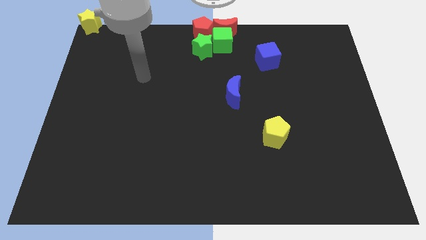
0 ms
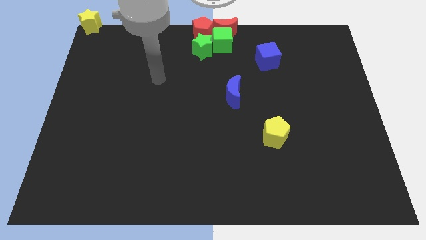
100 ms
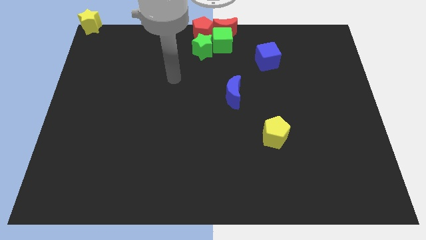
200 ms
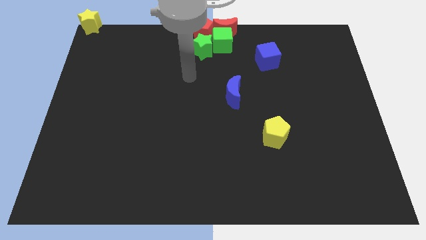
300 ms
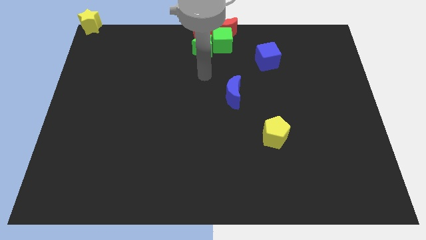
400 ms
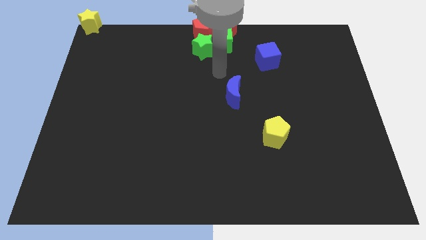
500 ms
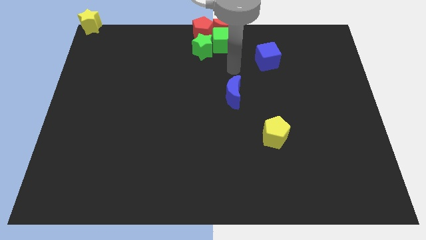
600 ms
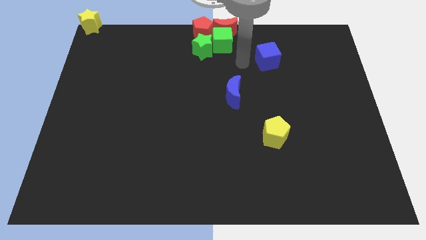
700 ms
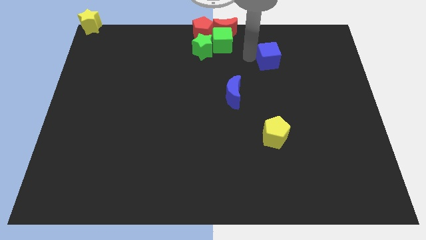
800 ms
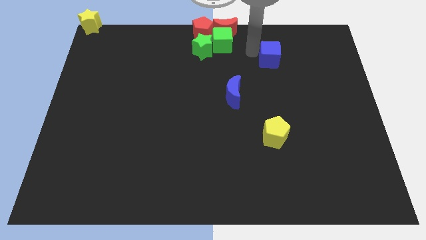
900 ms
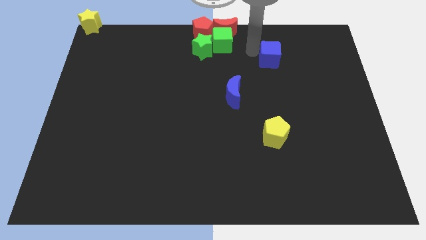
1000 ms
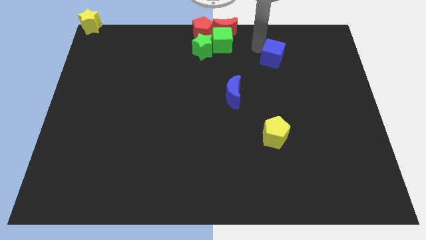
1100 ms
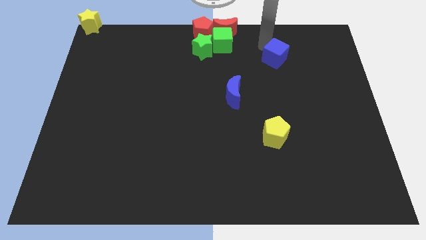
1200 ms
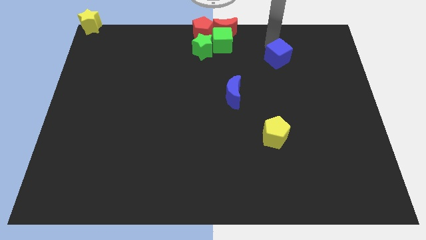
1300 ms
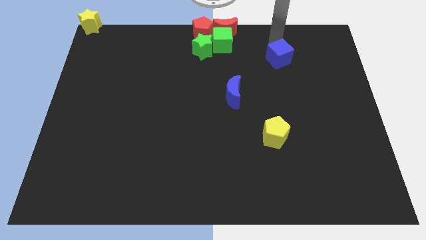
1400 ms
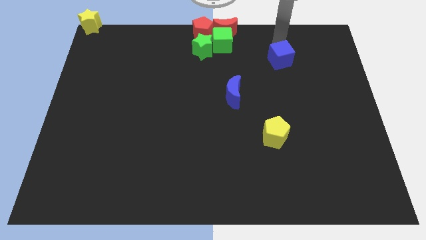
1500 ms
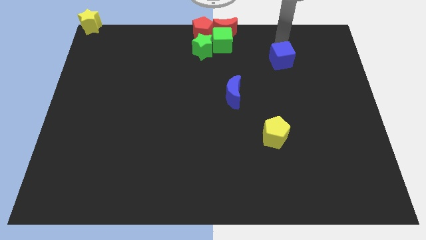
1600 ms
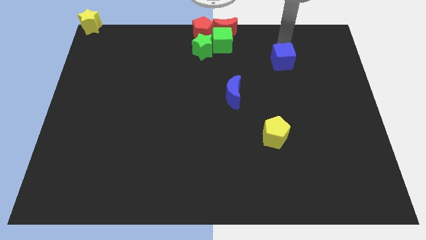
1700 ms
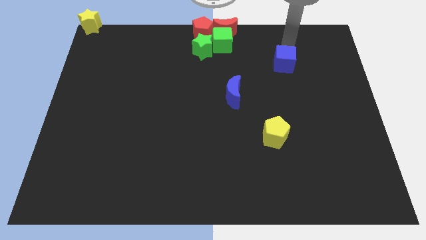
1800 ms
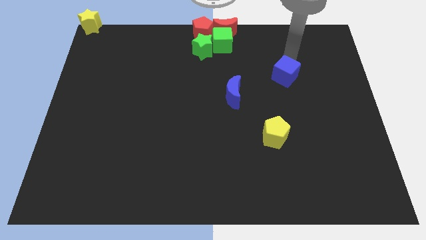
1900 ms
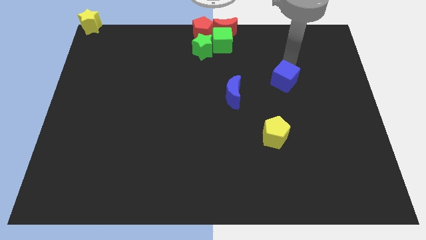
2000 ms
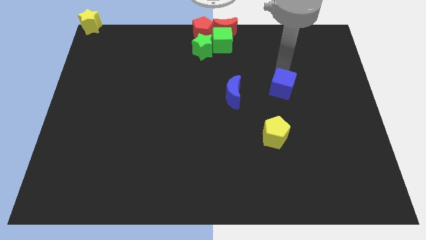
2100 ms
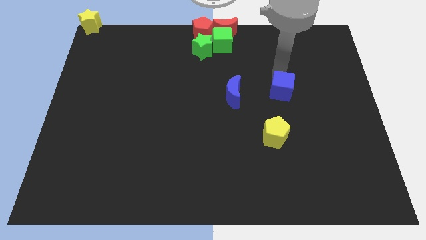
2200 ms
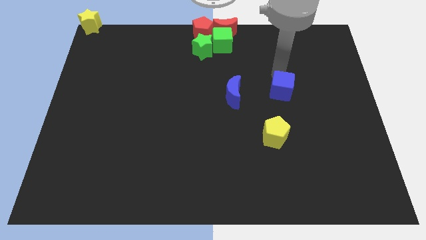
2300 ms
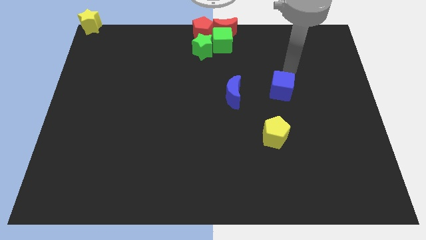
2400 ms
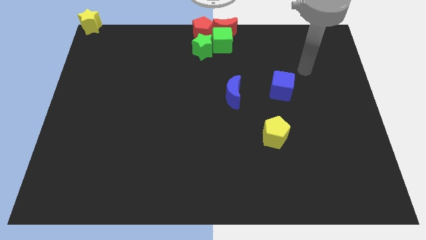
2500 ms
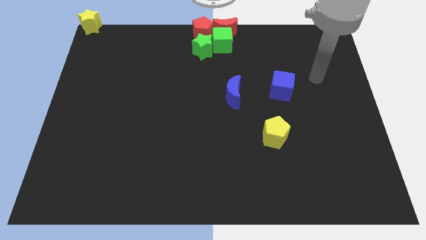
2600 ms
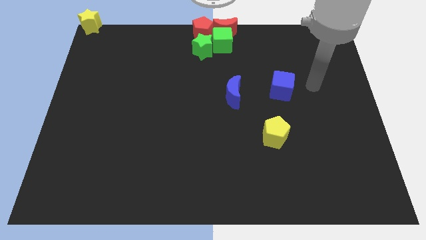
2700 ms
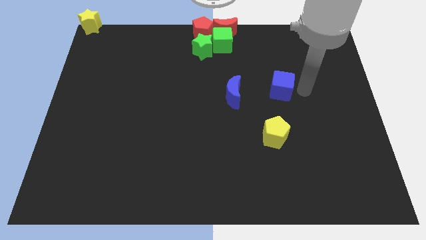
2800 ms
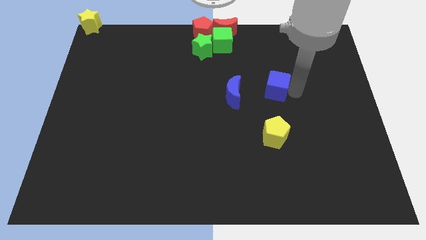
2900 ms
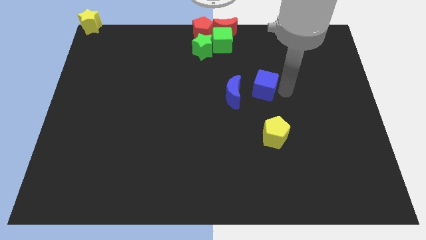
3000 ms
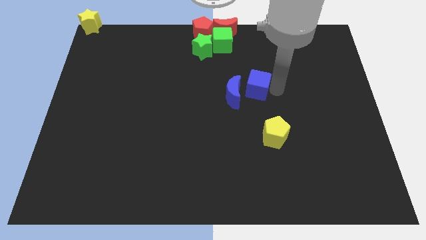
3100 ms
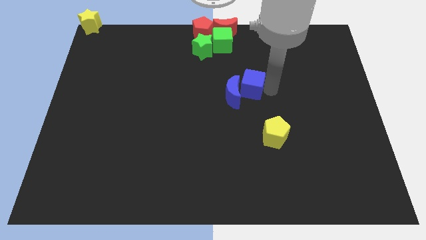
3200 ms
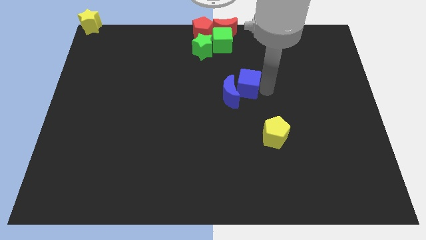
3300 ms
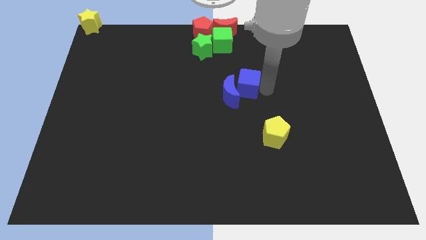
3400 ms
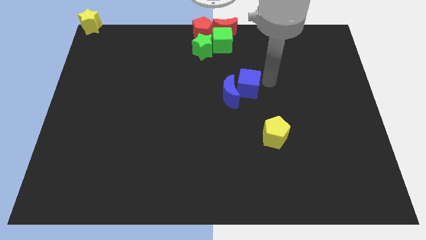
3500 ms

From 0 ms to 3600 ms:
push blue cube into blue moon

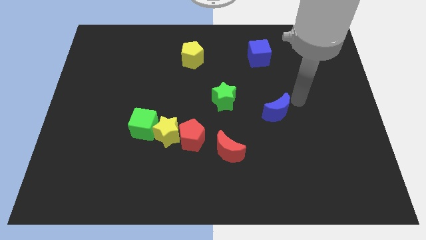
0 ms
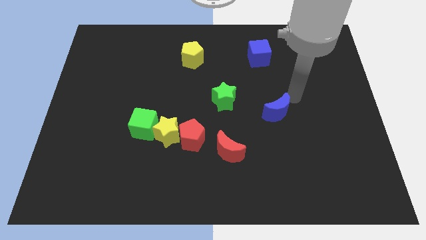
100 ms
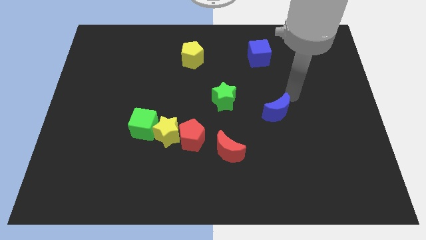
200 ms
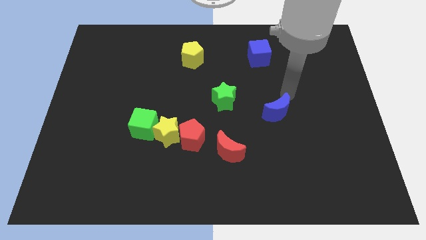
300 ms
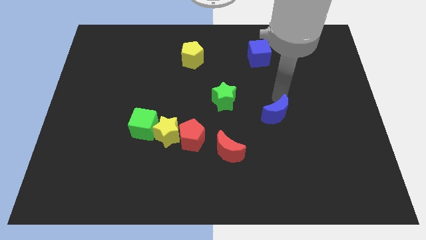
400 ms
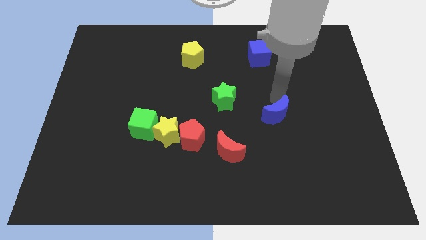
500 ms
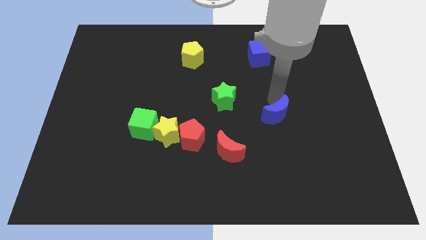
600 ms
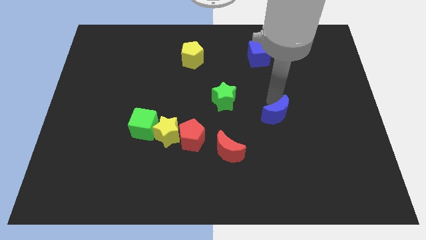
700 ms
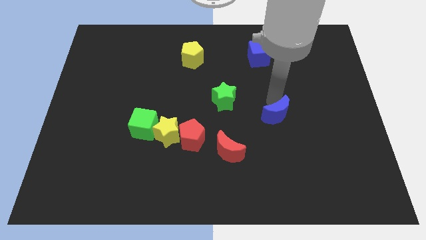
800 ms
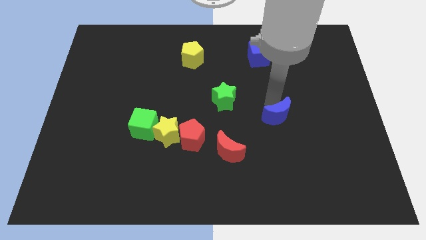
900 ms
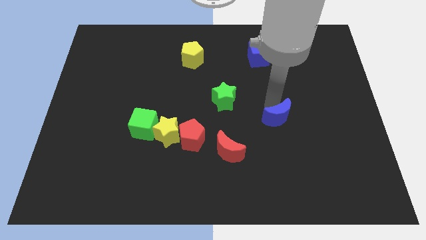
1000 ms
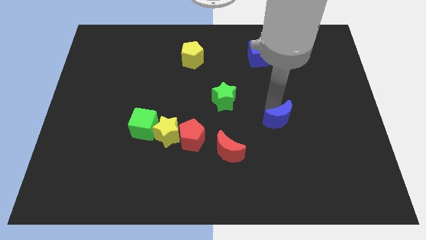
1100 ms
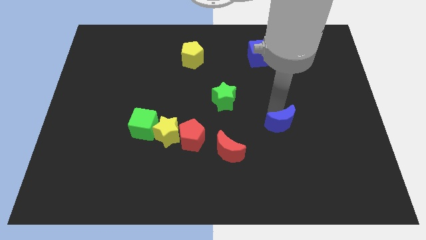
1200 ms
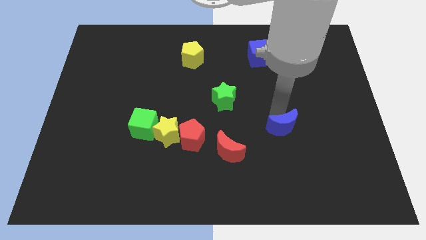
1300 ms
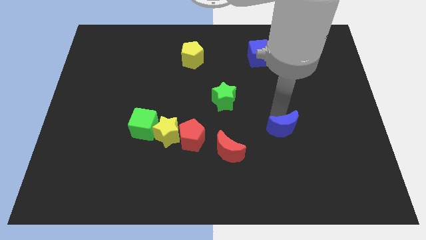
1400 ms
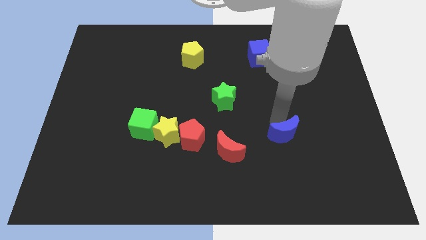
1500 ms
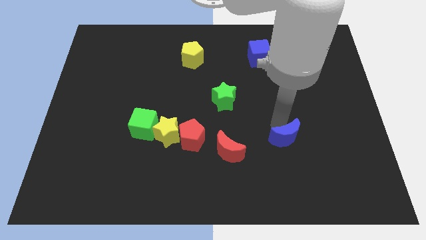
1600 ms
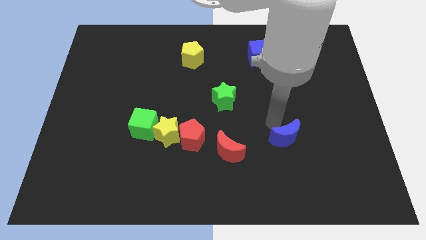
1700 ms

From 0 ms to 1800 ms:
push the blue crescent downwards

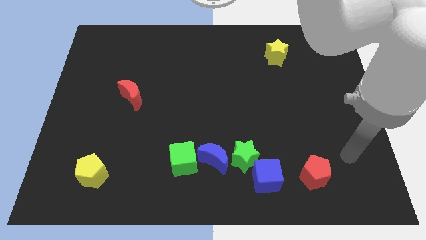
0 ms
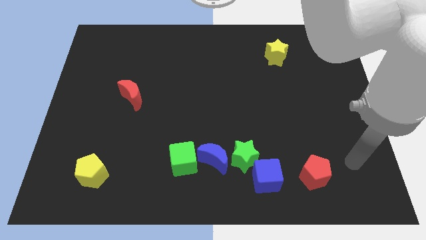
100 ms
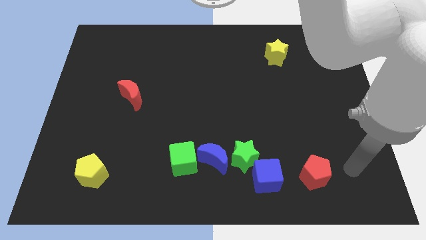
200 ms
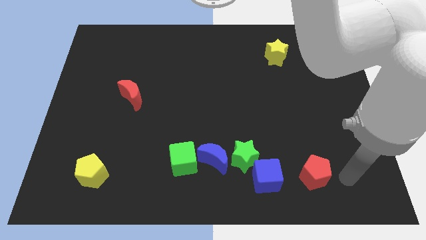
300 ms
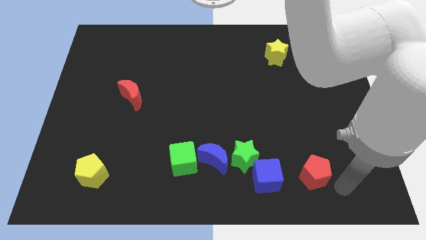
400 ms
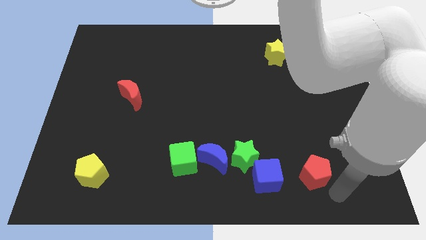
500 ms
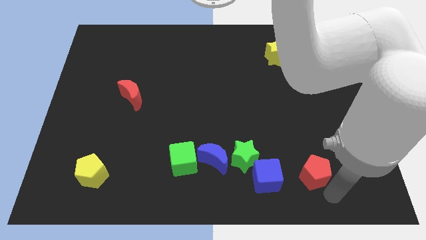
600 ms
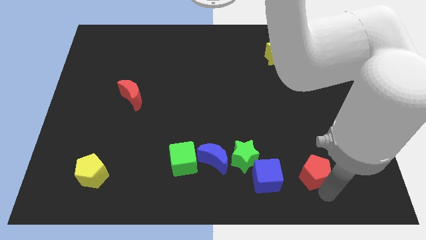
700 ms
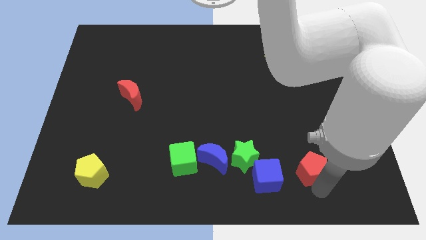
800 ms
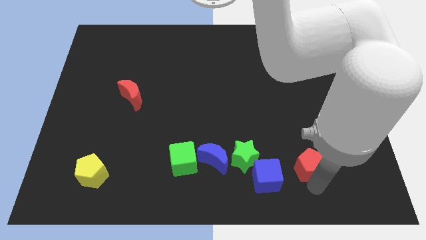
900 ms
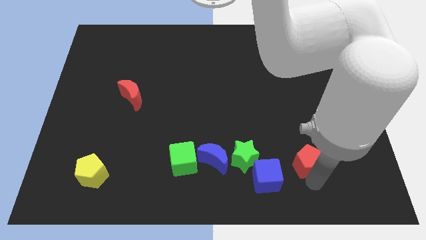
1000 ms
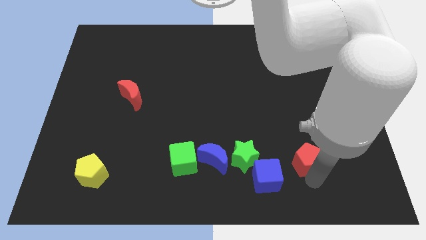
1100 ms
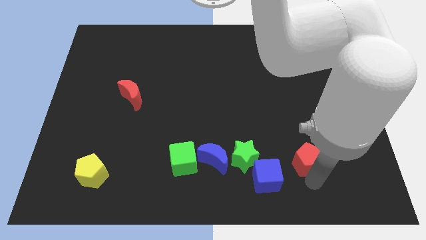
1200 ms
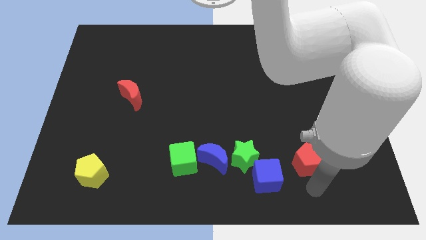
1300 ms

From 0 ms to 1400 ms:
move the red pentagon slightly up

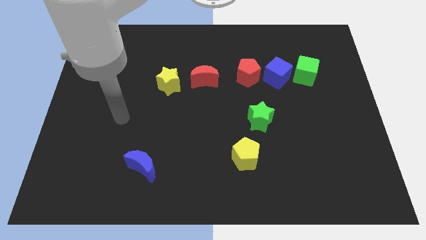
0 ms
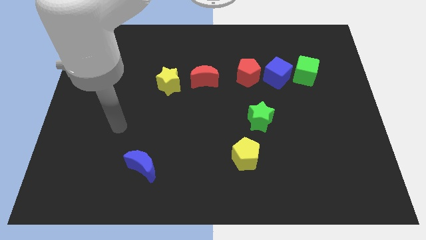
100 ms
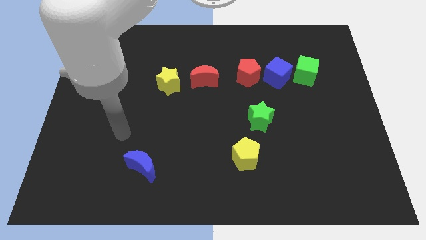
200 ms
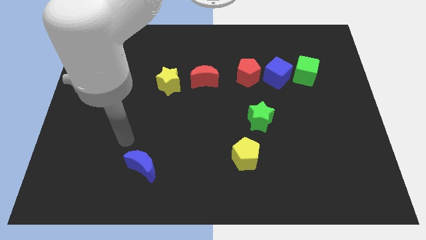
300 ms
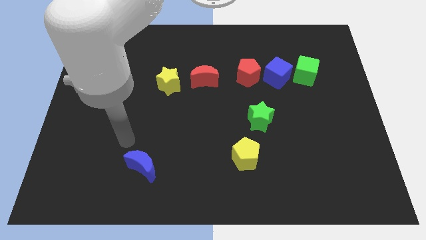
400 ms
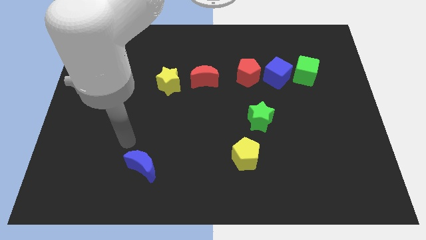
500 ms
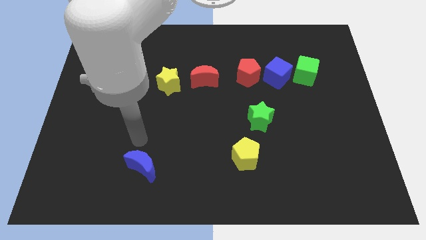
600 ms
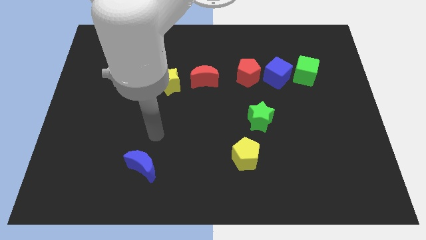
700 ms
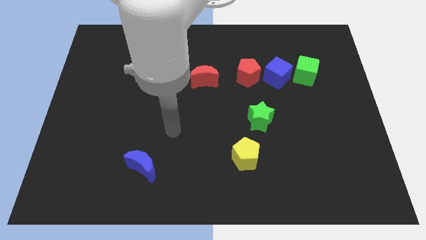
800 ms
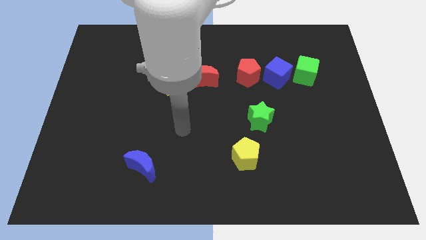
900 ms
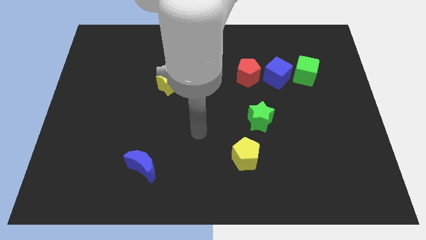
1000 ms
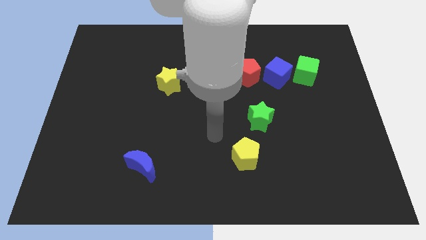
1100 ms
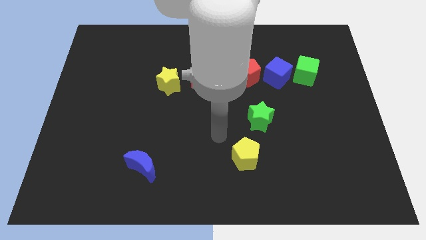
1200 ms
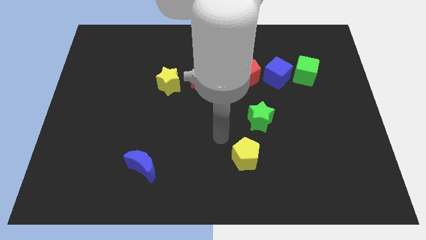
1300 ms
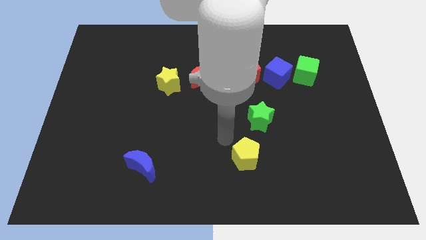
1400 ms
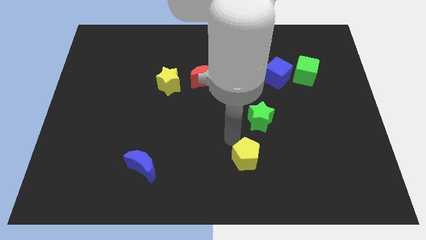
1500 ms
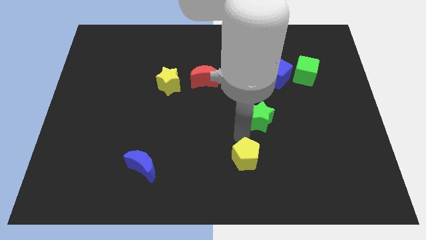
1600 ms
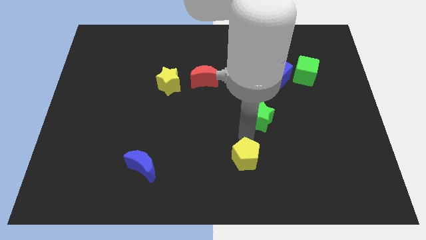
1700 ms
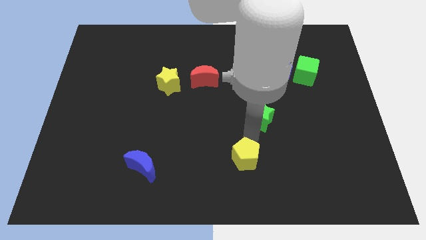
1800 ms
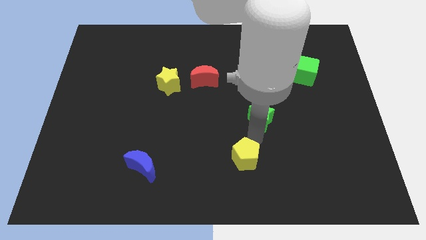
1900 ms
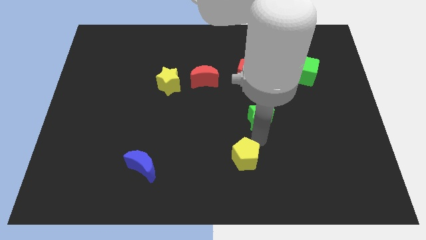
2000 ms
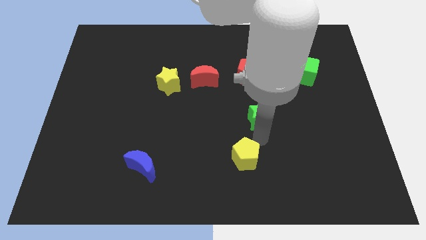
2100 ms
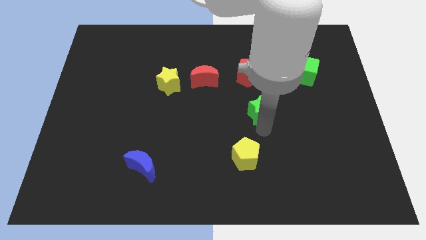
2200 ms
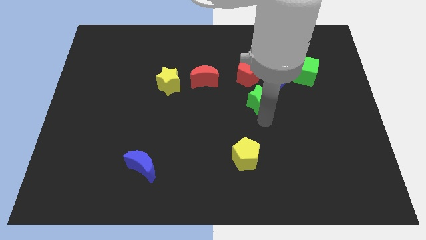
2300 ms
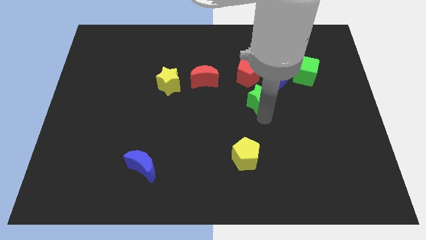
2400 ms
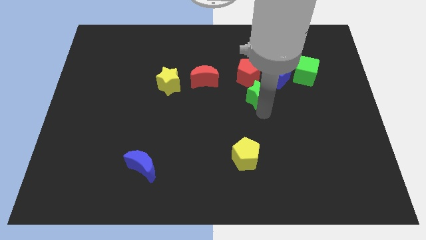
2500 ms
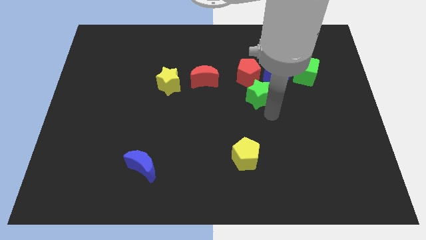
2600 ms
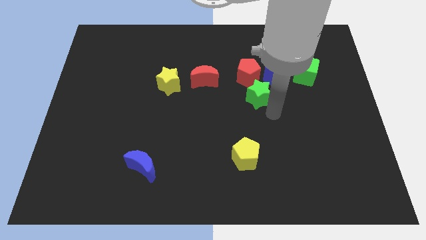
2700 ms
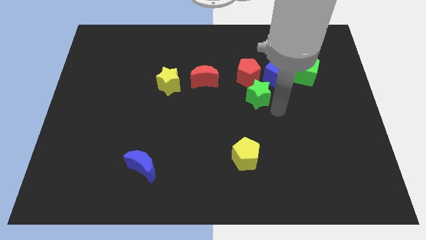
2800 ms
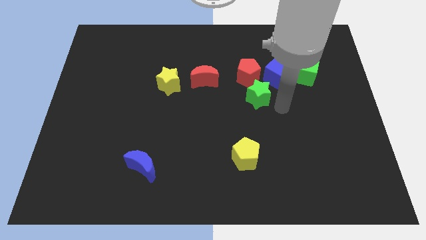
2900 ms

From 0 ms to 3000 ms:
move the green star below the red pentagon
